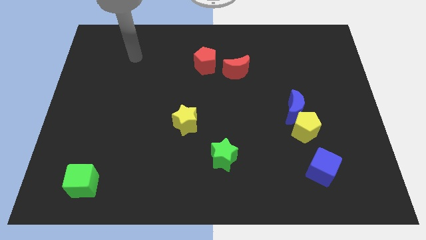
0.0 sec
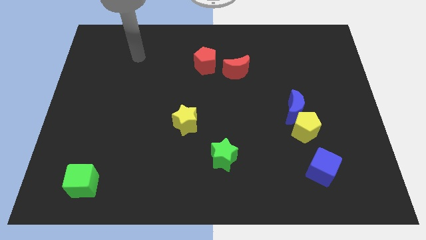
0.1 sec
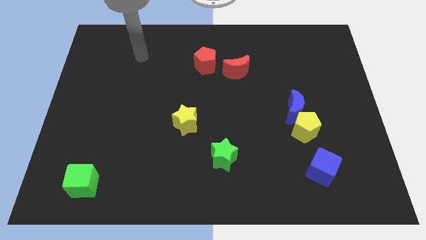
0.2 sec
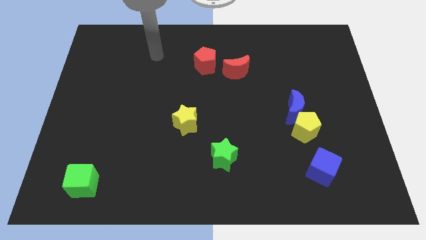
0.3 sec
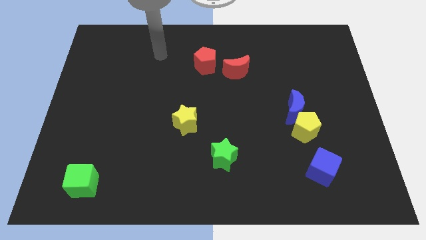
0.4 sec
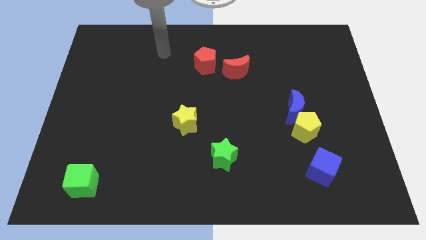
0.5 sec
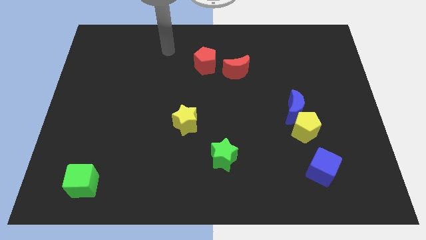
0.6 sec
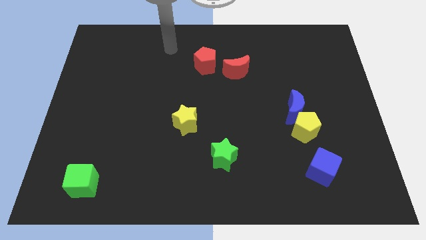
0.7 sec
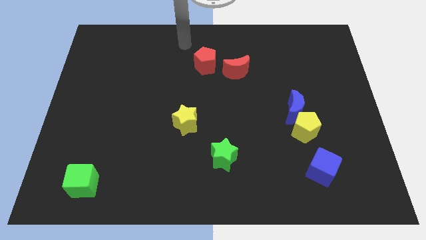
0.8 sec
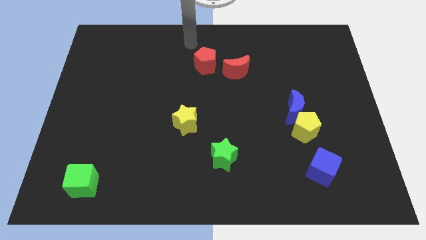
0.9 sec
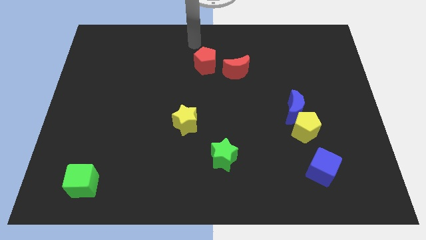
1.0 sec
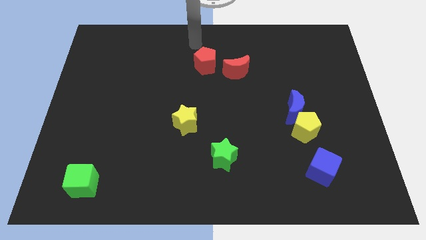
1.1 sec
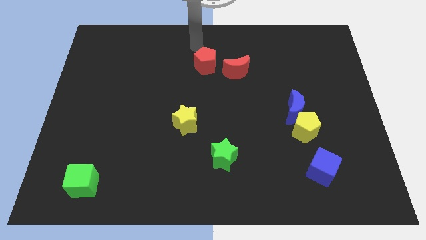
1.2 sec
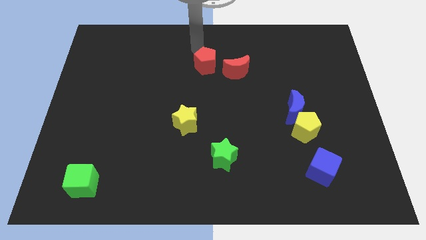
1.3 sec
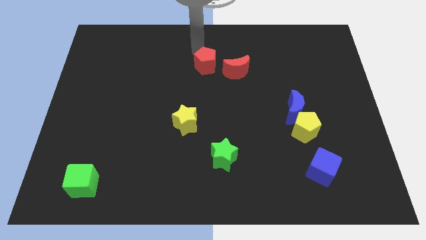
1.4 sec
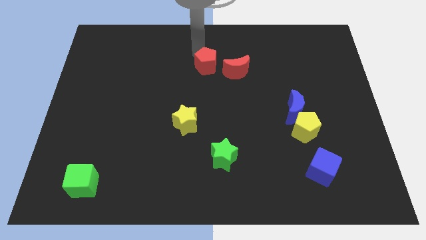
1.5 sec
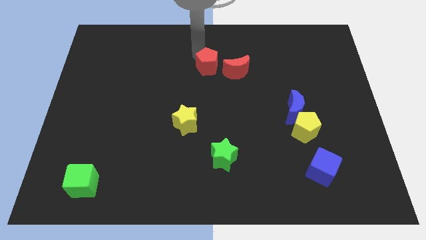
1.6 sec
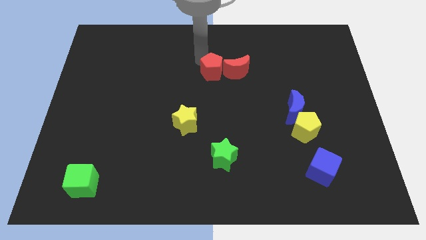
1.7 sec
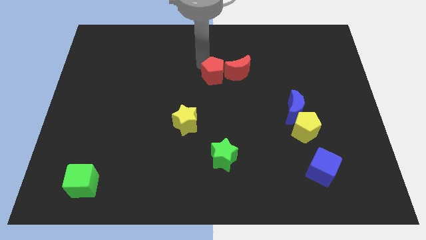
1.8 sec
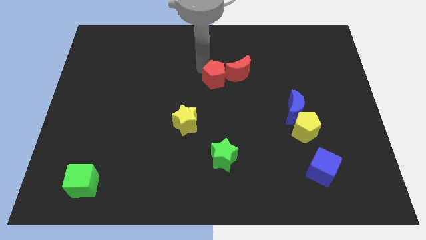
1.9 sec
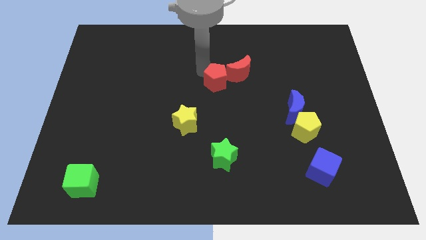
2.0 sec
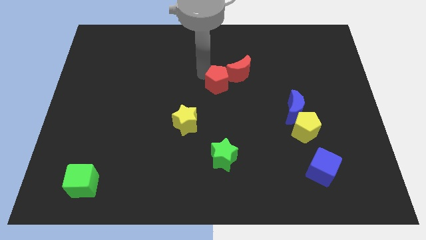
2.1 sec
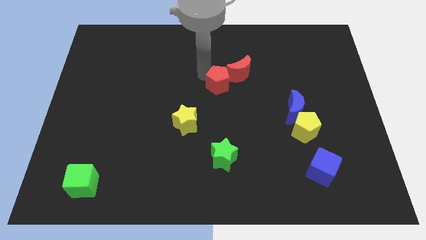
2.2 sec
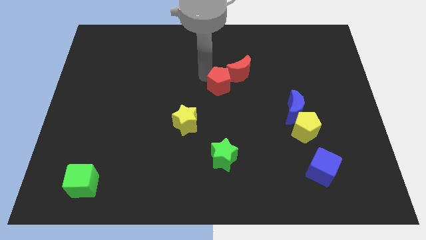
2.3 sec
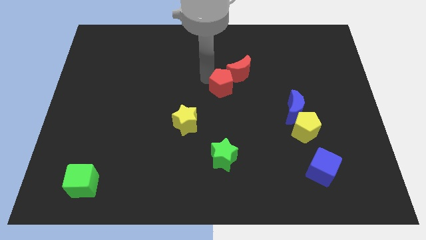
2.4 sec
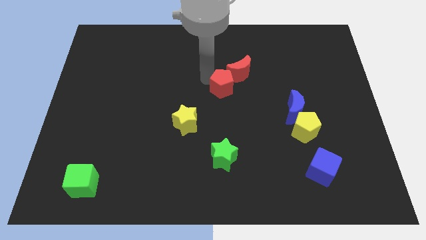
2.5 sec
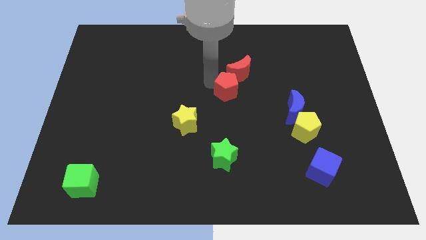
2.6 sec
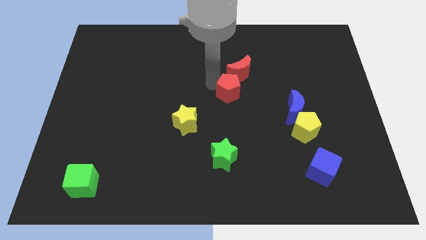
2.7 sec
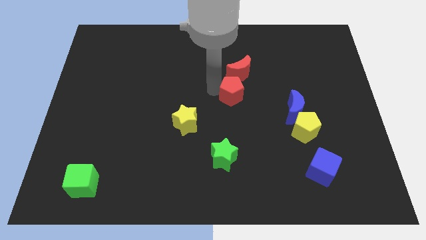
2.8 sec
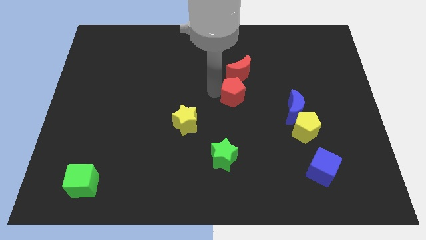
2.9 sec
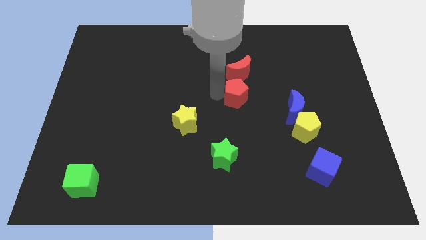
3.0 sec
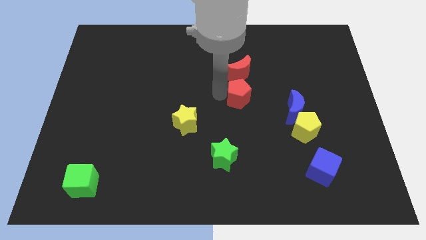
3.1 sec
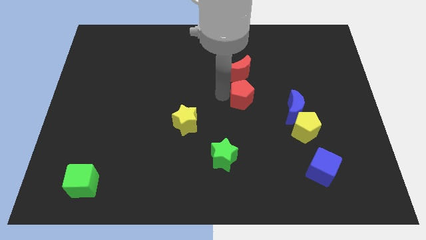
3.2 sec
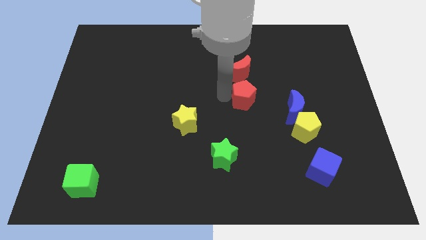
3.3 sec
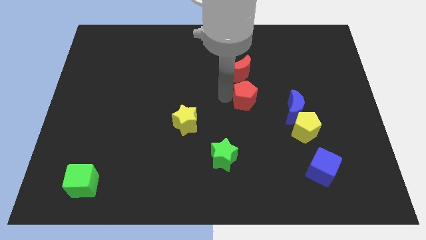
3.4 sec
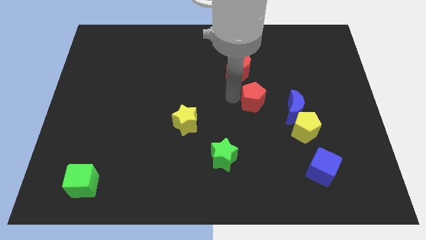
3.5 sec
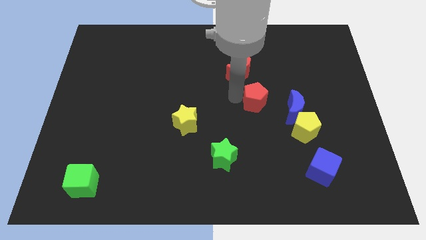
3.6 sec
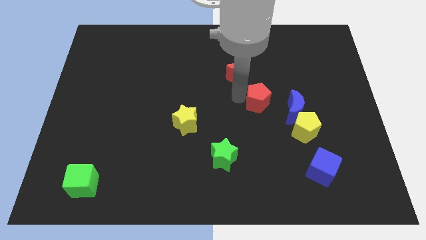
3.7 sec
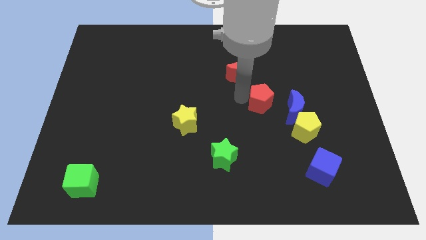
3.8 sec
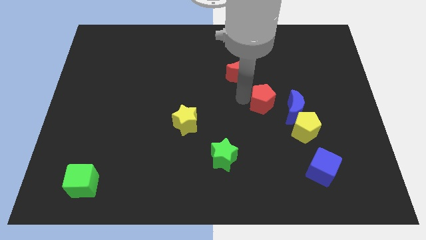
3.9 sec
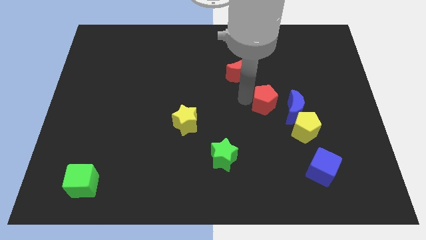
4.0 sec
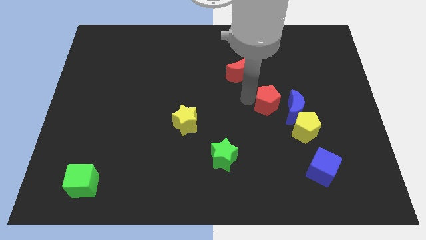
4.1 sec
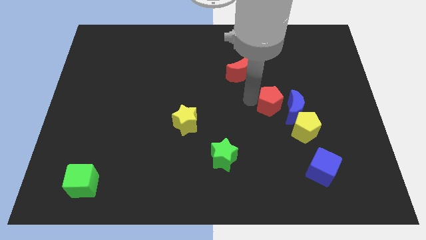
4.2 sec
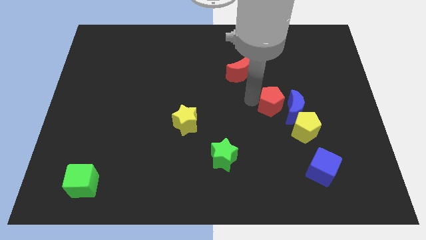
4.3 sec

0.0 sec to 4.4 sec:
put the red pentagon next to the blue moon

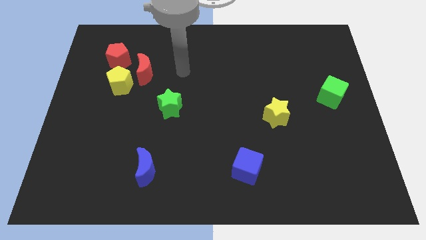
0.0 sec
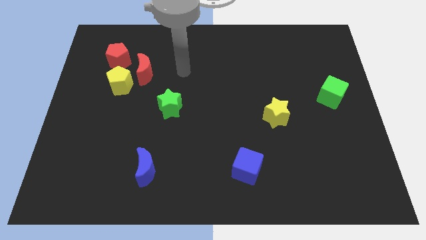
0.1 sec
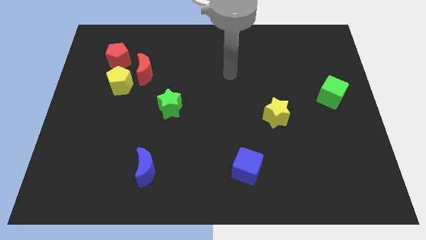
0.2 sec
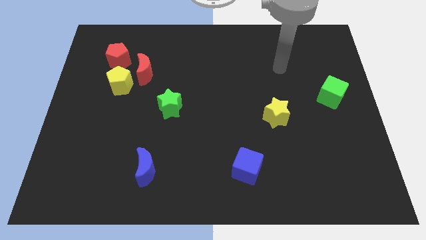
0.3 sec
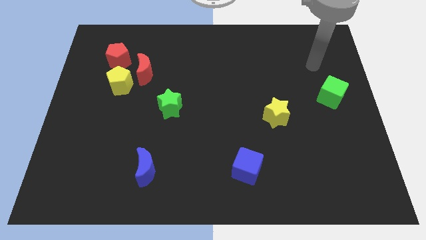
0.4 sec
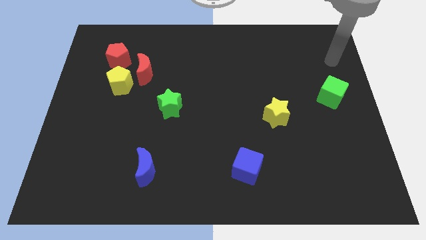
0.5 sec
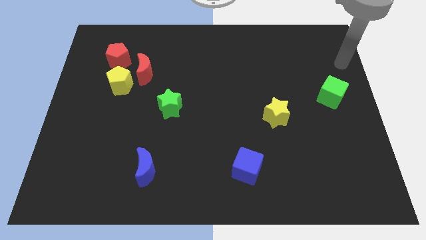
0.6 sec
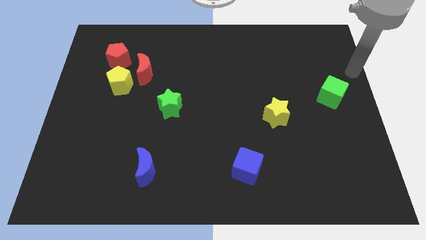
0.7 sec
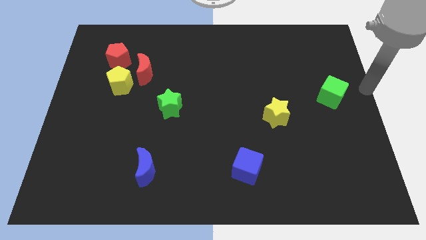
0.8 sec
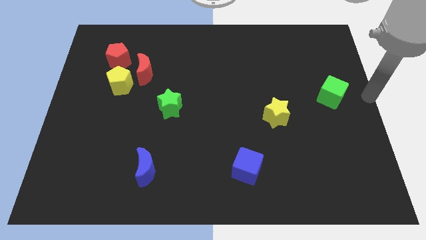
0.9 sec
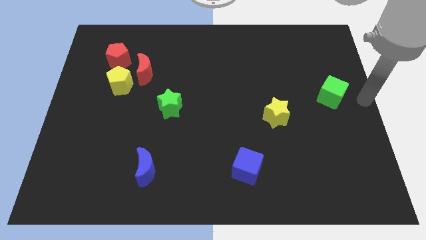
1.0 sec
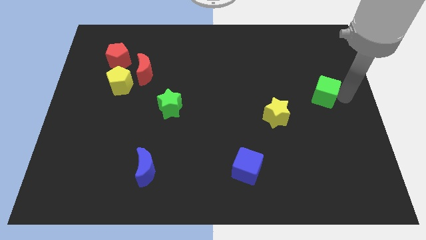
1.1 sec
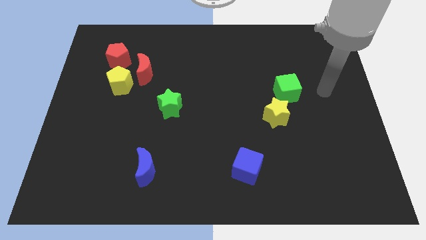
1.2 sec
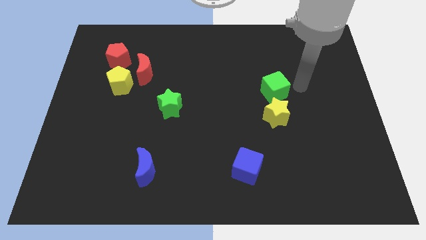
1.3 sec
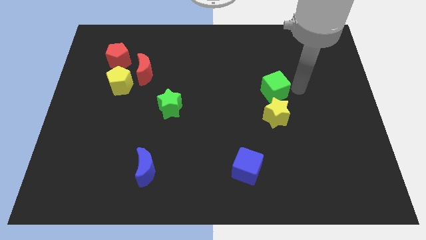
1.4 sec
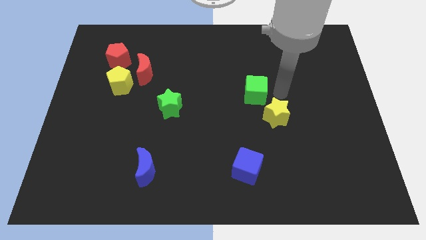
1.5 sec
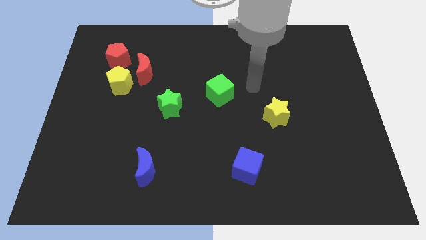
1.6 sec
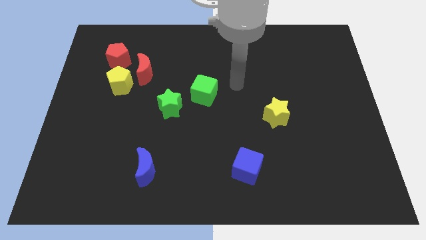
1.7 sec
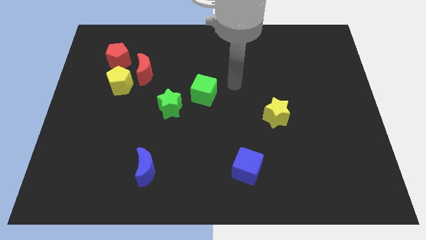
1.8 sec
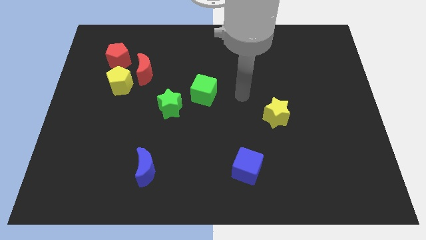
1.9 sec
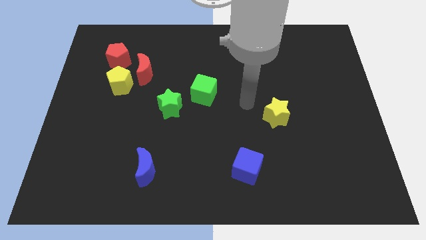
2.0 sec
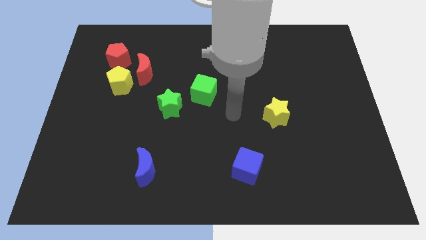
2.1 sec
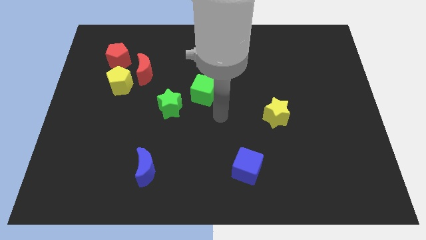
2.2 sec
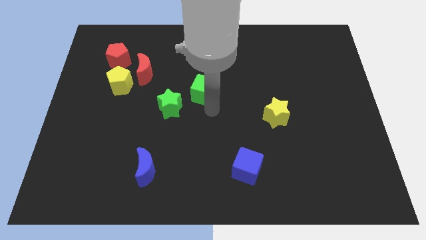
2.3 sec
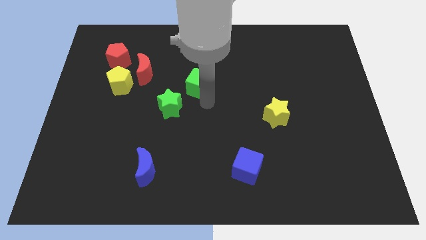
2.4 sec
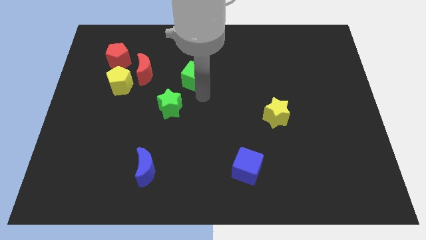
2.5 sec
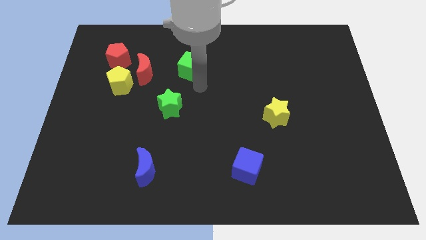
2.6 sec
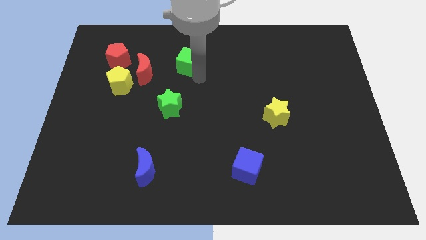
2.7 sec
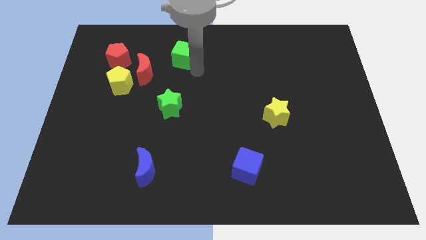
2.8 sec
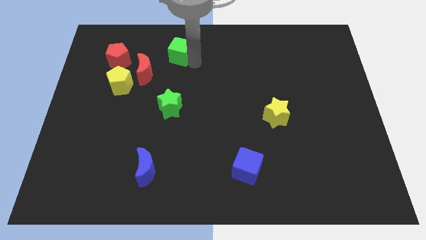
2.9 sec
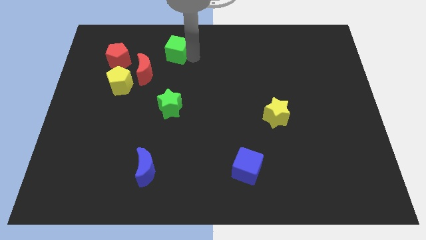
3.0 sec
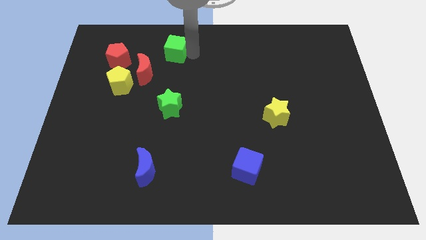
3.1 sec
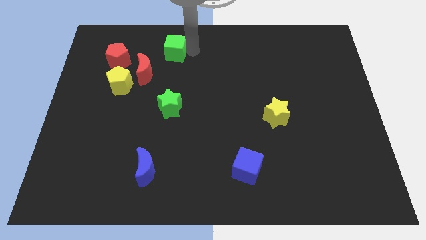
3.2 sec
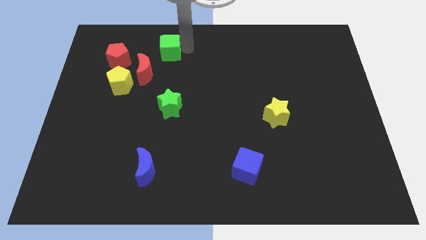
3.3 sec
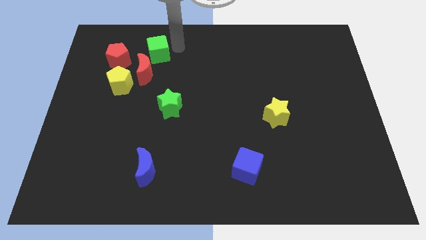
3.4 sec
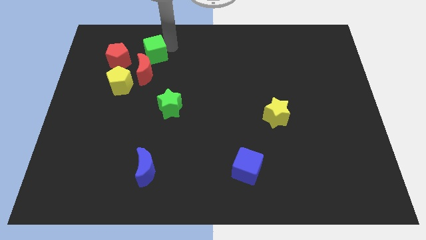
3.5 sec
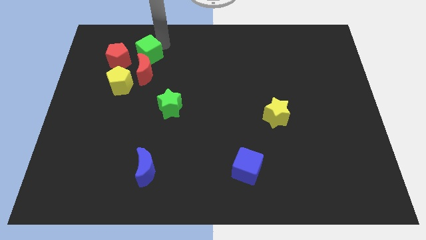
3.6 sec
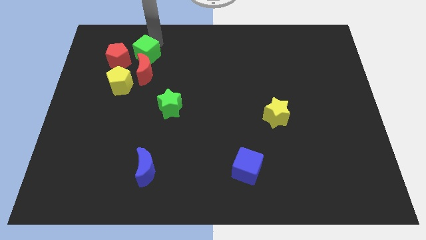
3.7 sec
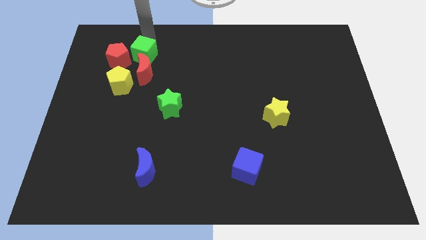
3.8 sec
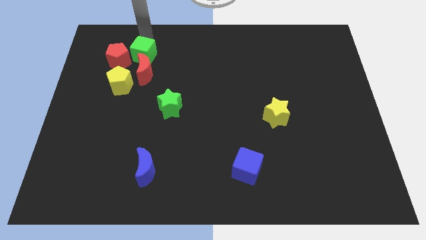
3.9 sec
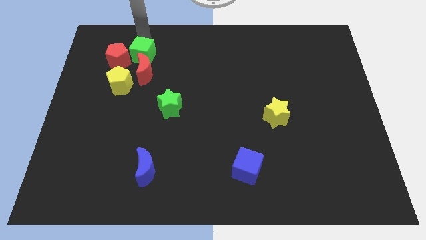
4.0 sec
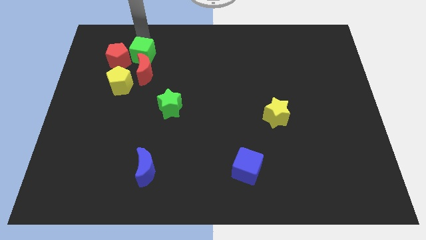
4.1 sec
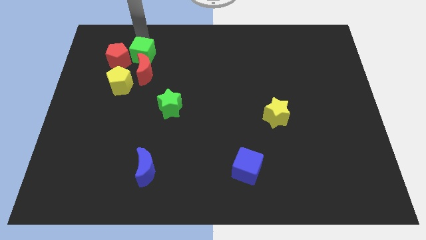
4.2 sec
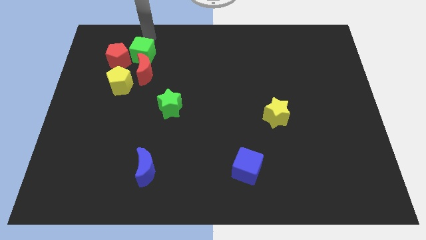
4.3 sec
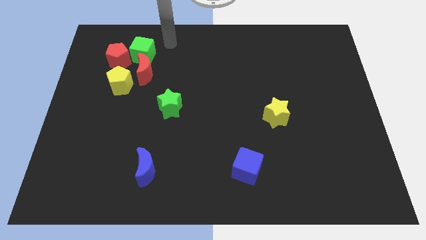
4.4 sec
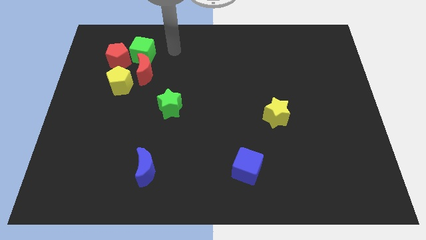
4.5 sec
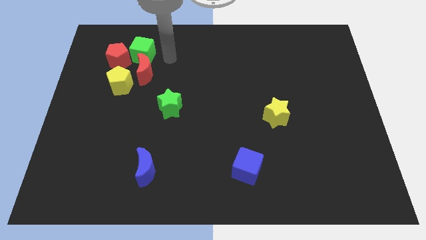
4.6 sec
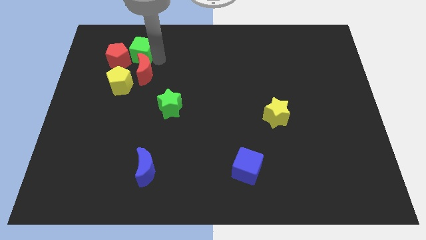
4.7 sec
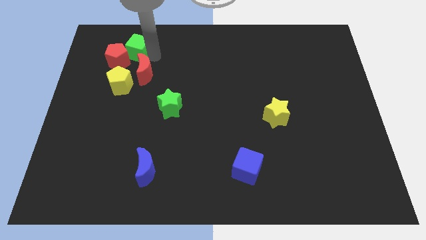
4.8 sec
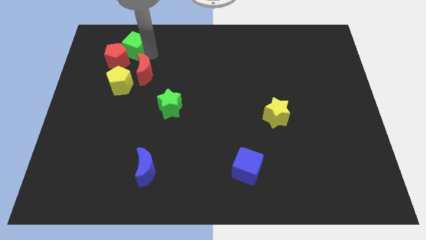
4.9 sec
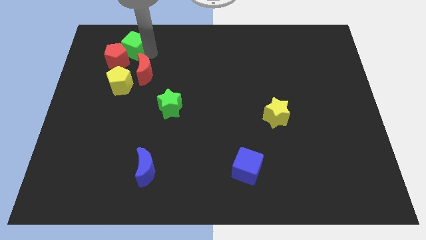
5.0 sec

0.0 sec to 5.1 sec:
move the green cube to the red pentagon
